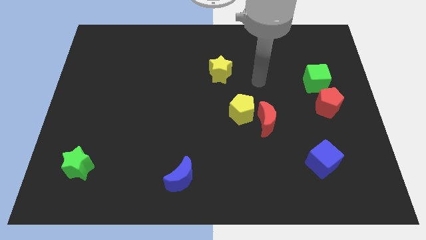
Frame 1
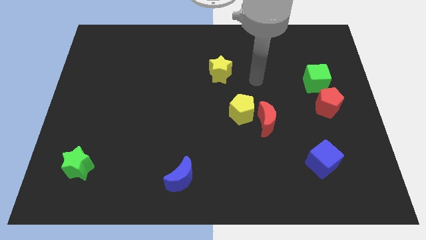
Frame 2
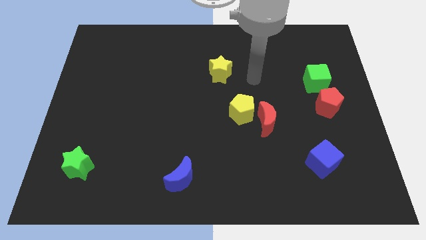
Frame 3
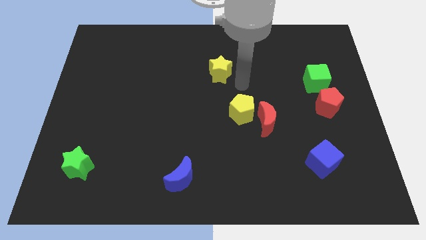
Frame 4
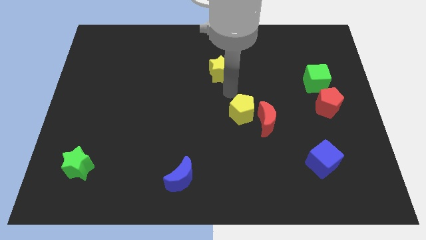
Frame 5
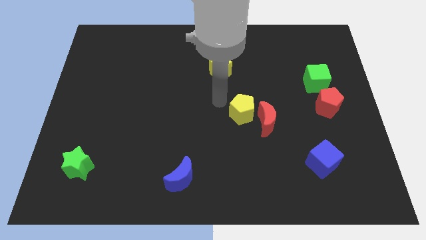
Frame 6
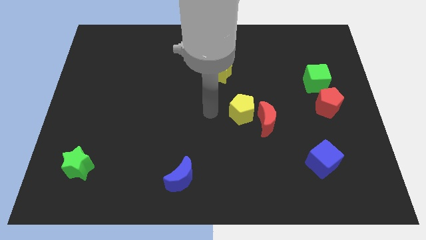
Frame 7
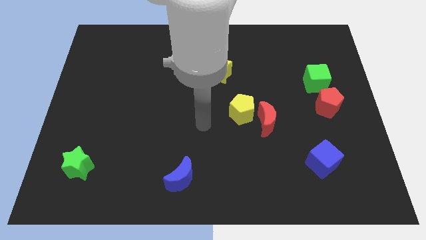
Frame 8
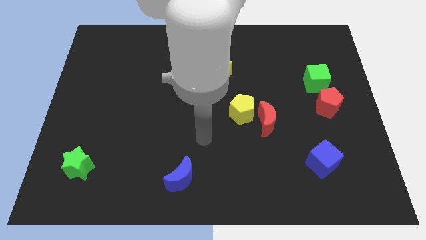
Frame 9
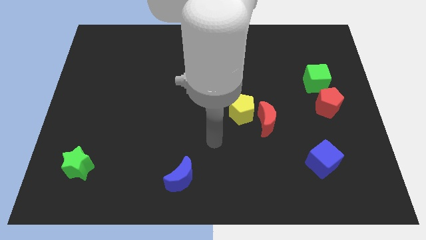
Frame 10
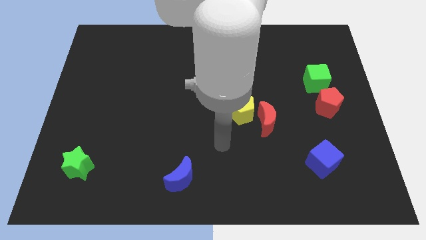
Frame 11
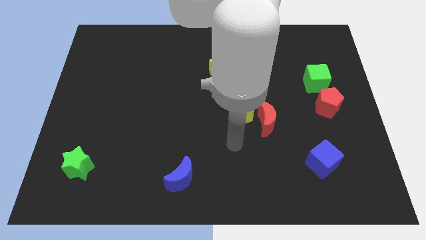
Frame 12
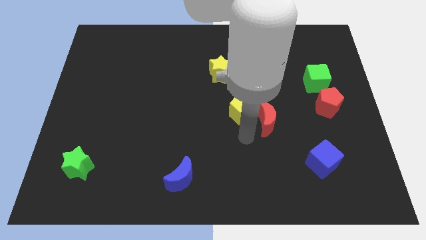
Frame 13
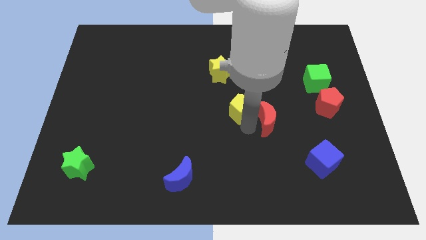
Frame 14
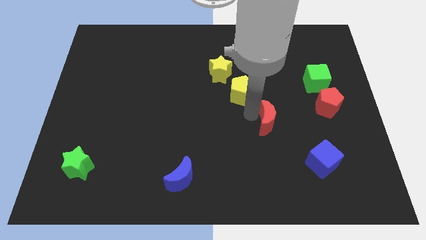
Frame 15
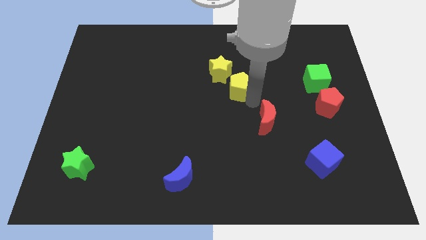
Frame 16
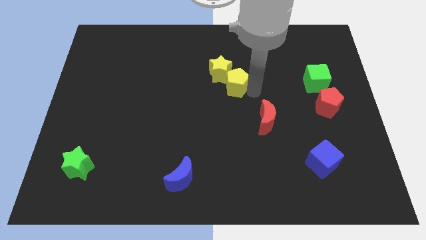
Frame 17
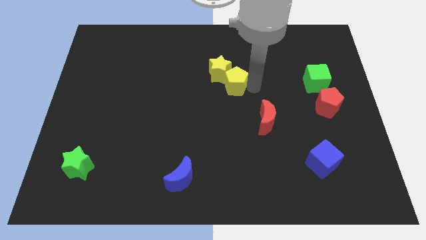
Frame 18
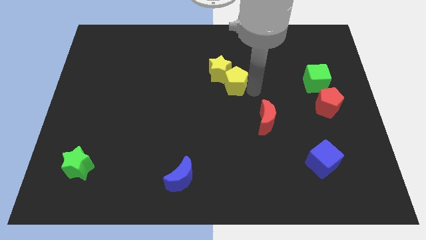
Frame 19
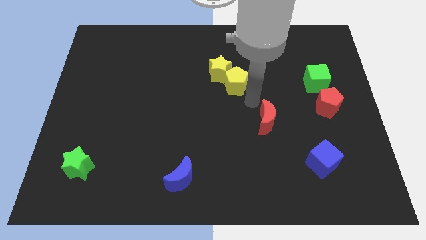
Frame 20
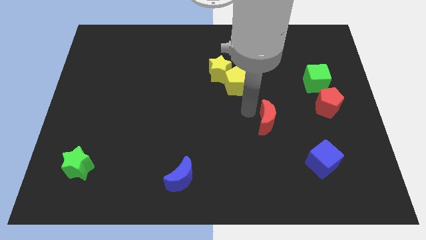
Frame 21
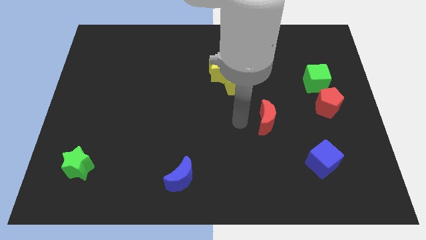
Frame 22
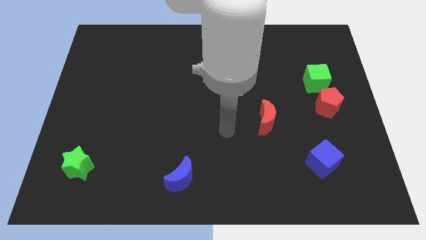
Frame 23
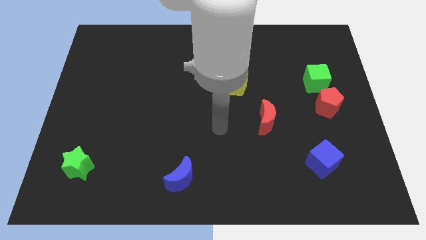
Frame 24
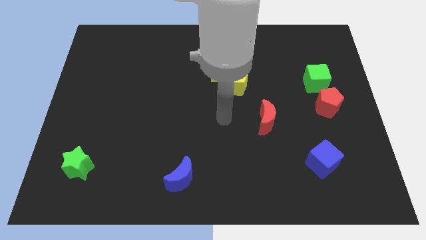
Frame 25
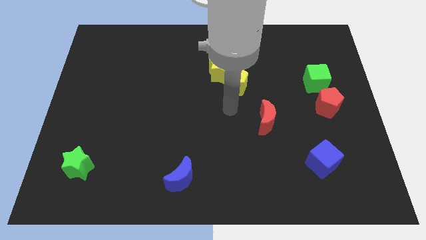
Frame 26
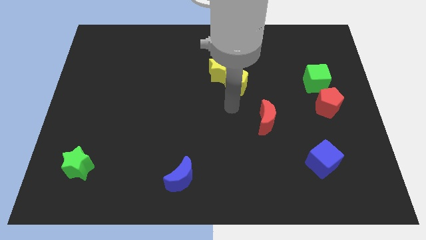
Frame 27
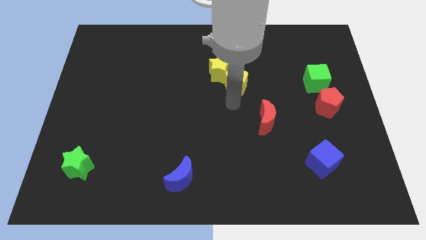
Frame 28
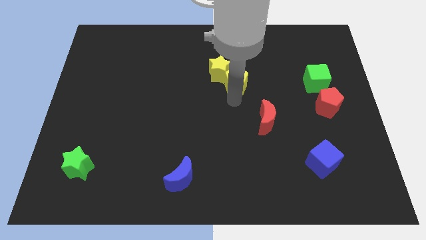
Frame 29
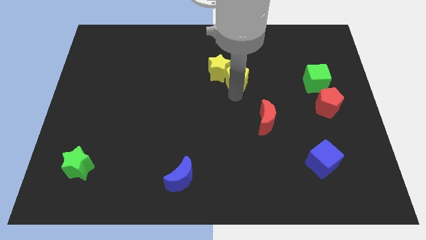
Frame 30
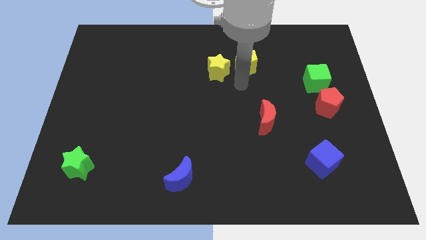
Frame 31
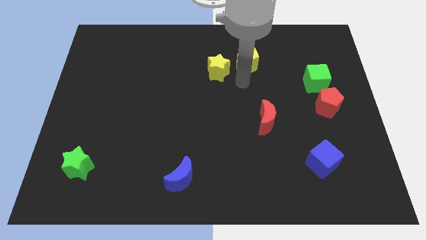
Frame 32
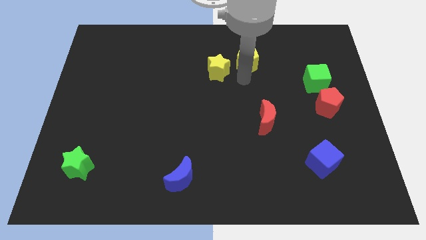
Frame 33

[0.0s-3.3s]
push the yellow pentagon close to the yellow star

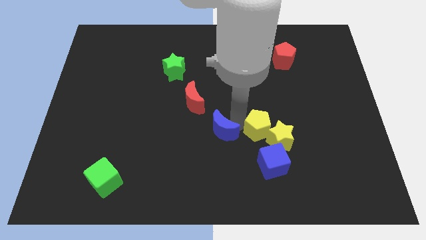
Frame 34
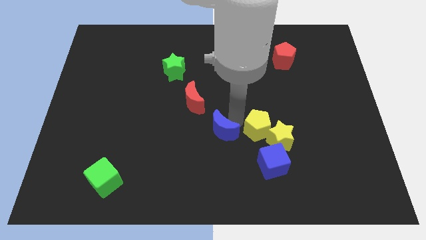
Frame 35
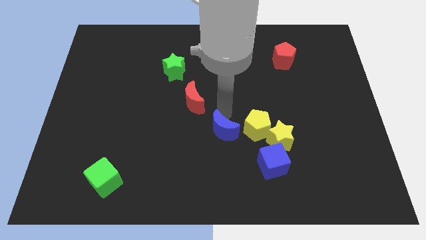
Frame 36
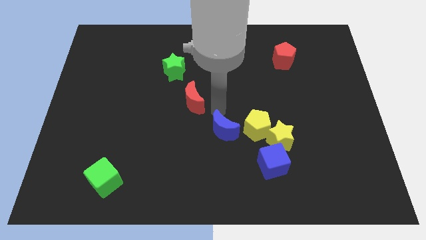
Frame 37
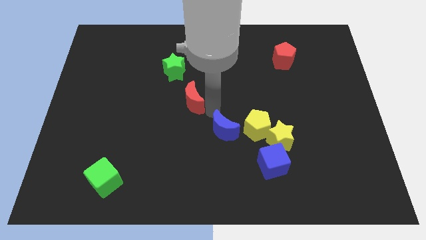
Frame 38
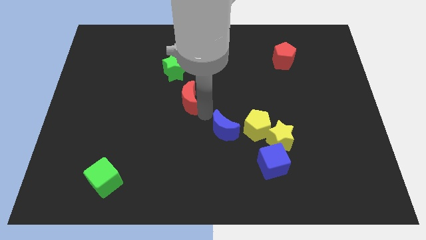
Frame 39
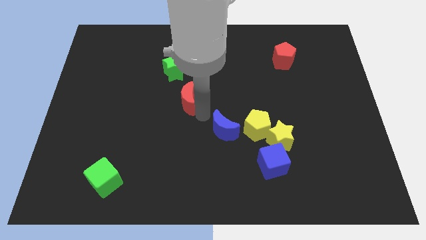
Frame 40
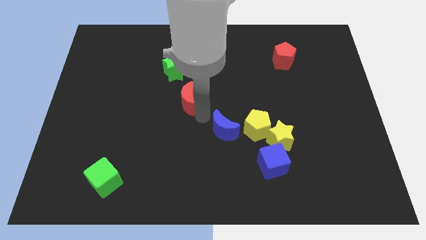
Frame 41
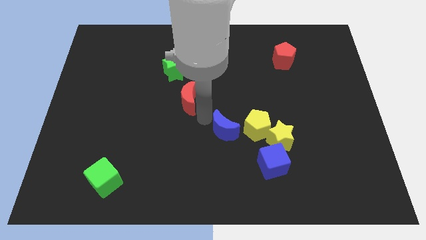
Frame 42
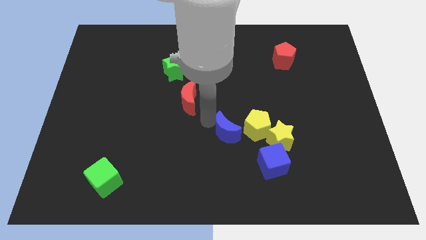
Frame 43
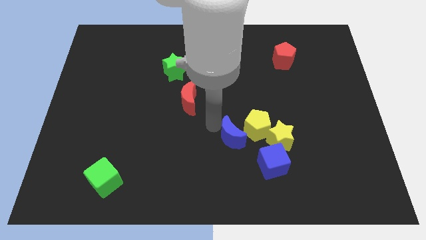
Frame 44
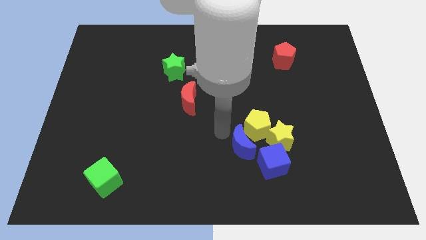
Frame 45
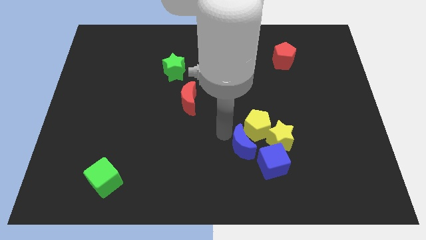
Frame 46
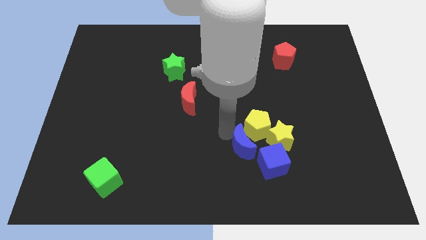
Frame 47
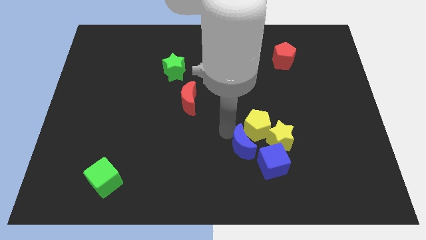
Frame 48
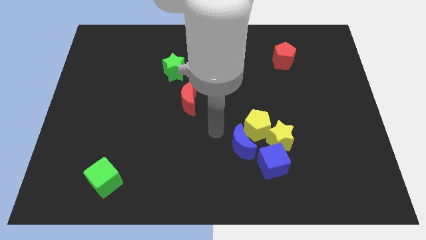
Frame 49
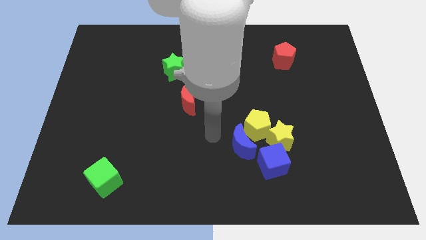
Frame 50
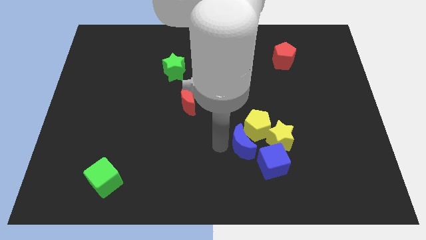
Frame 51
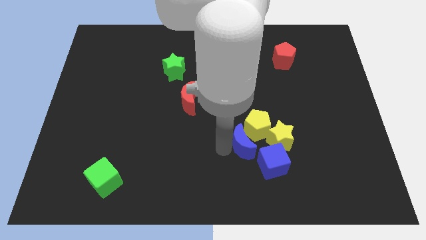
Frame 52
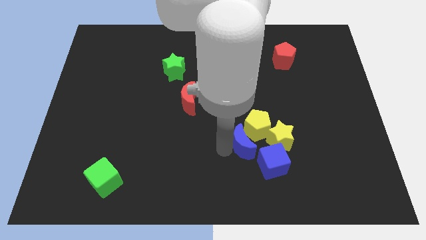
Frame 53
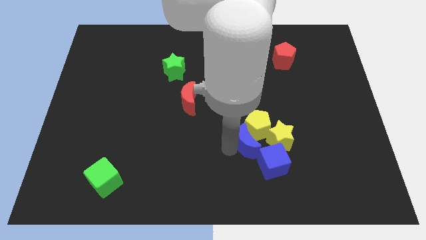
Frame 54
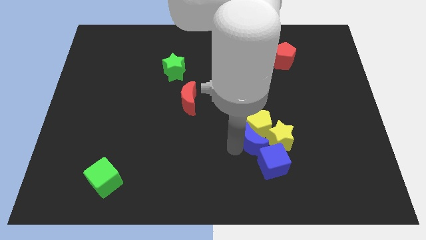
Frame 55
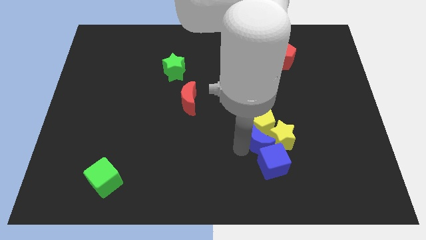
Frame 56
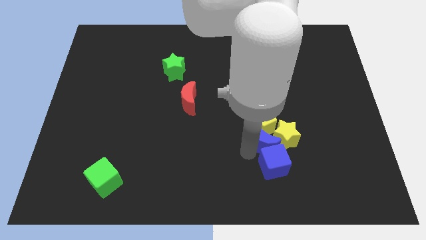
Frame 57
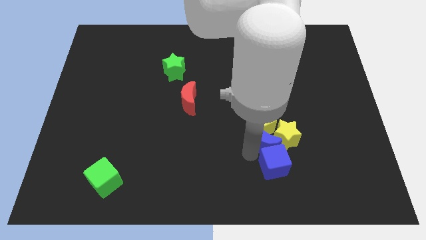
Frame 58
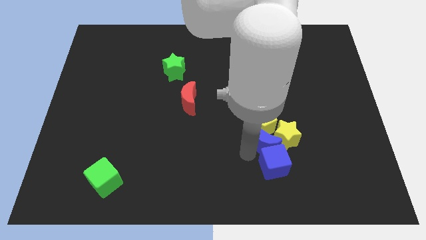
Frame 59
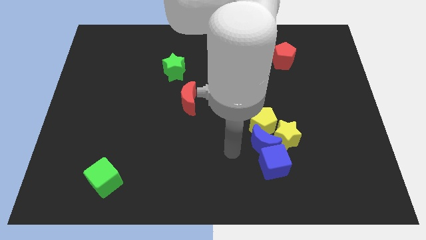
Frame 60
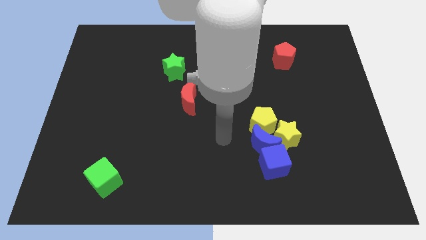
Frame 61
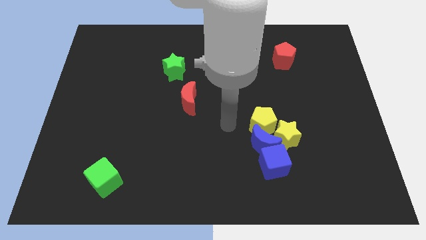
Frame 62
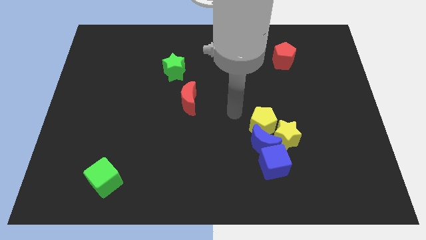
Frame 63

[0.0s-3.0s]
move the blue moon left beside the yellow star

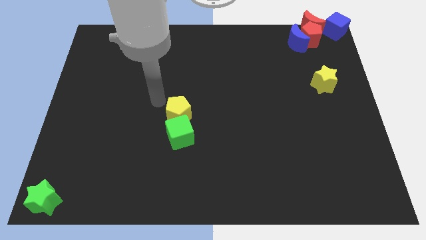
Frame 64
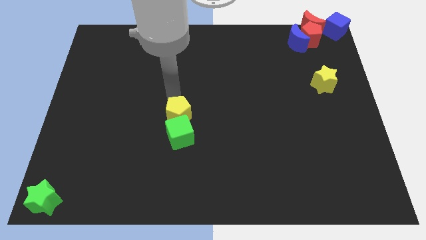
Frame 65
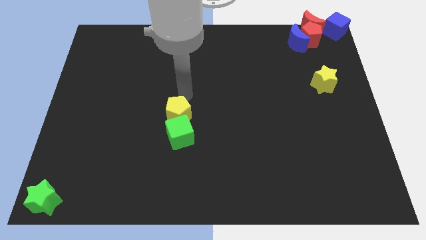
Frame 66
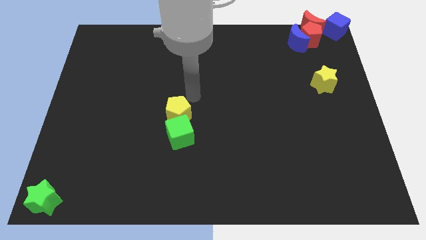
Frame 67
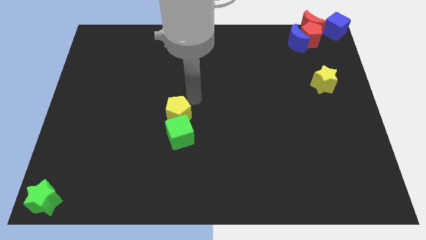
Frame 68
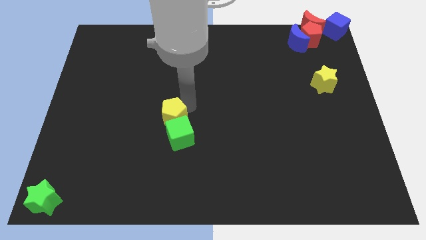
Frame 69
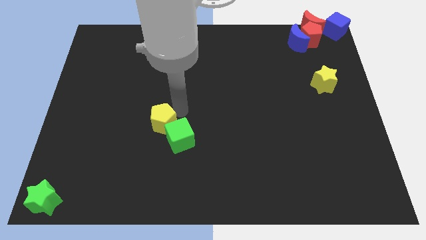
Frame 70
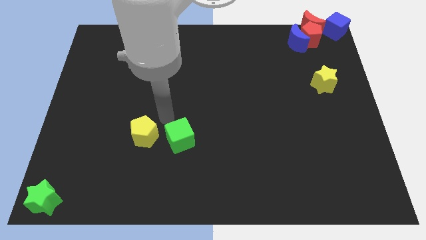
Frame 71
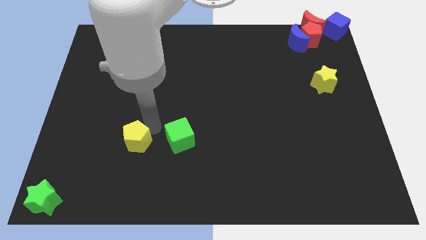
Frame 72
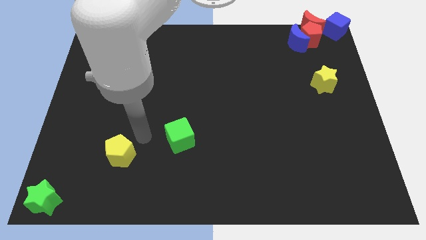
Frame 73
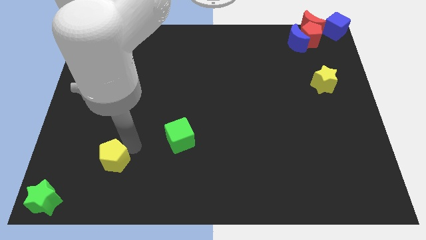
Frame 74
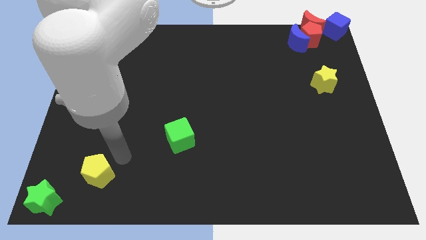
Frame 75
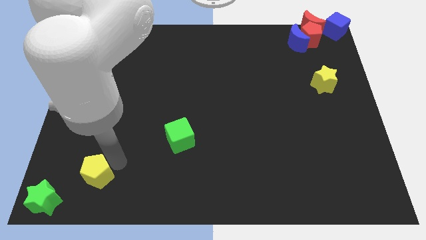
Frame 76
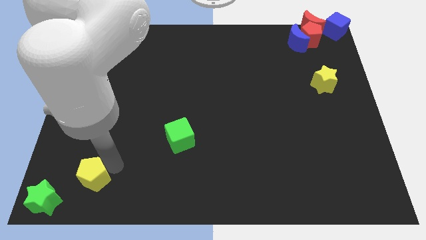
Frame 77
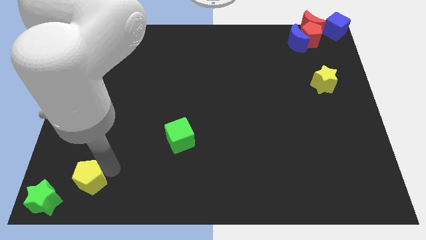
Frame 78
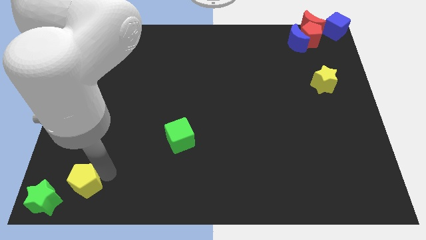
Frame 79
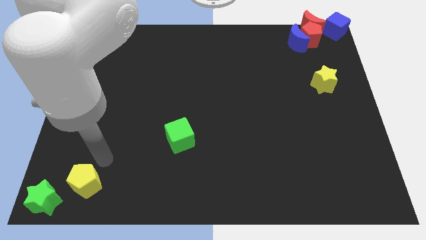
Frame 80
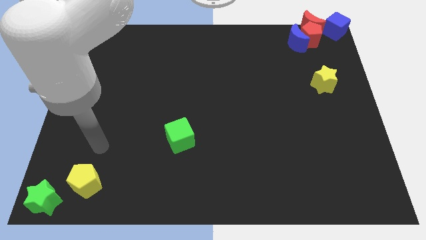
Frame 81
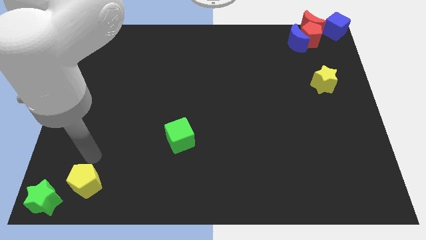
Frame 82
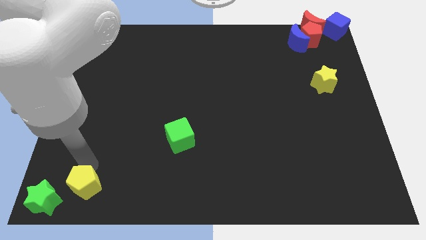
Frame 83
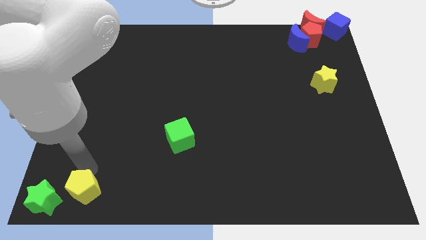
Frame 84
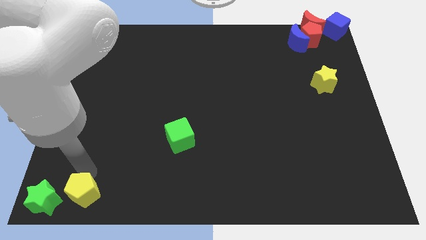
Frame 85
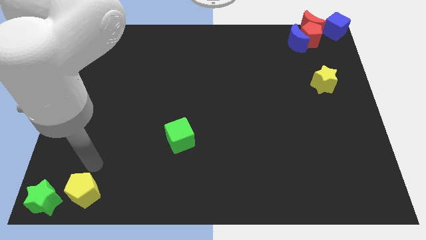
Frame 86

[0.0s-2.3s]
move the yellow pentagon to the right of the green star

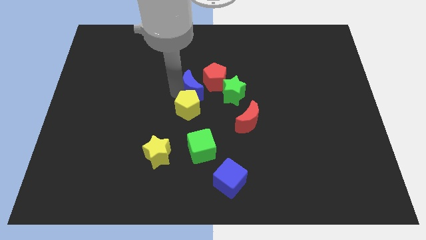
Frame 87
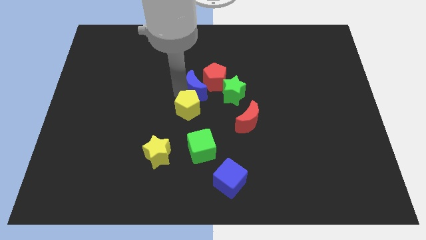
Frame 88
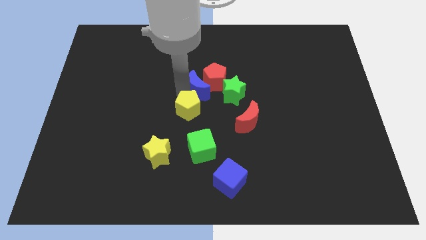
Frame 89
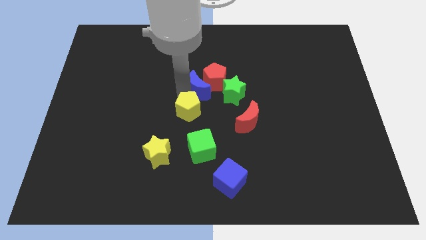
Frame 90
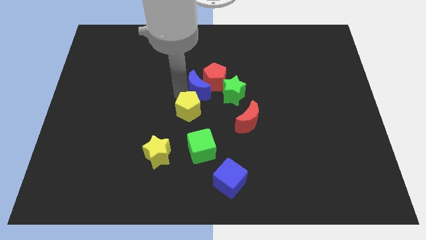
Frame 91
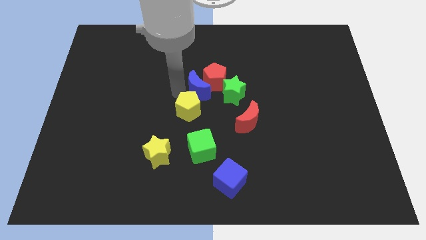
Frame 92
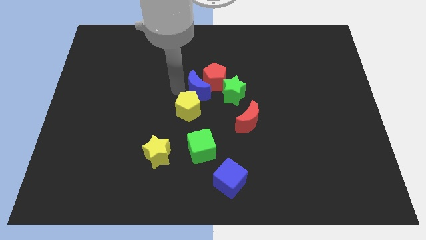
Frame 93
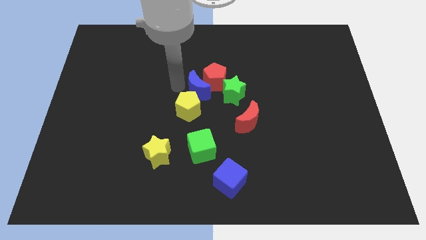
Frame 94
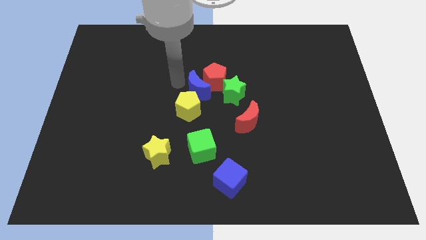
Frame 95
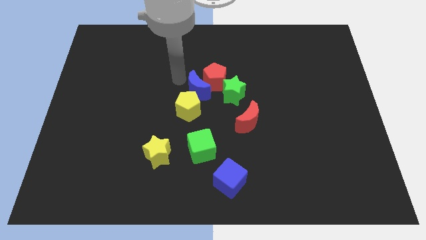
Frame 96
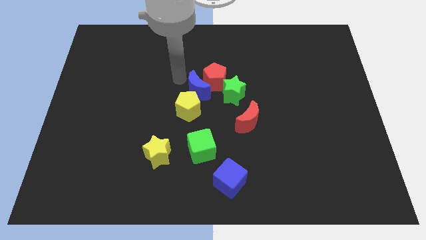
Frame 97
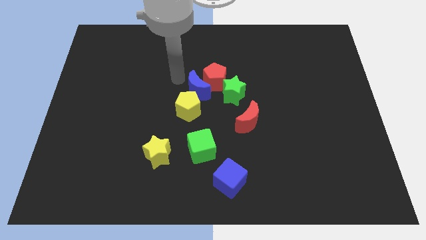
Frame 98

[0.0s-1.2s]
place the blue moon in between the red and yellow pentagon
